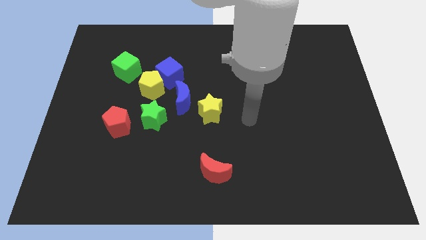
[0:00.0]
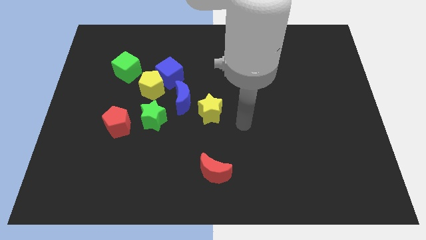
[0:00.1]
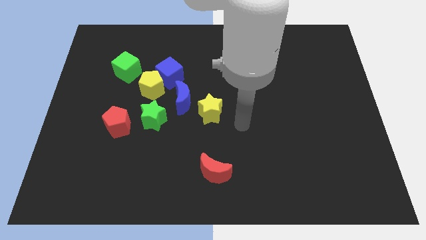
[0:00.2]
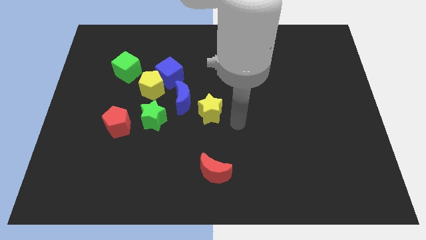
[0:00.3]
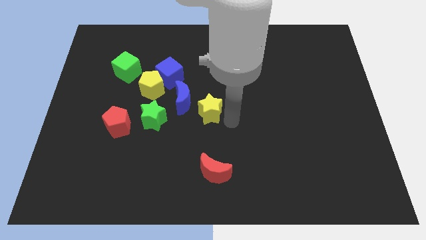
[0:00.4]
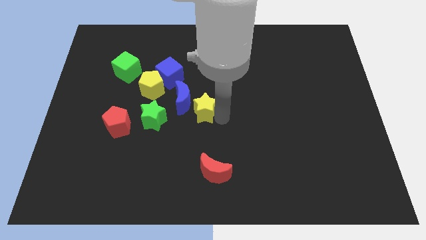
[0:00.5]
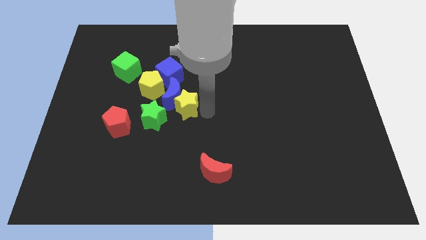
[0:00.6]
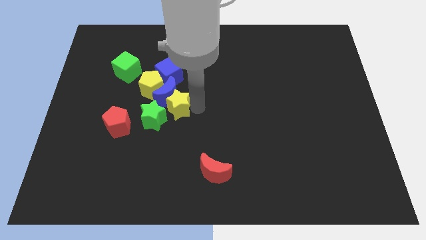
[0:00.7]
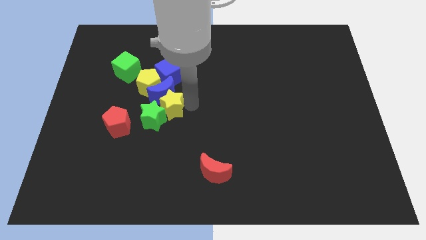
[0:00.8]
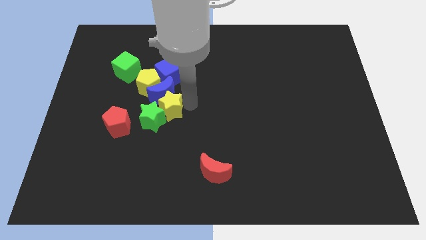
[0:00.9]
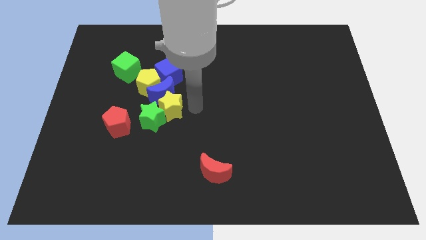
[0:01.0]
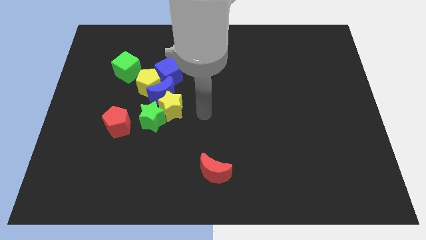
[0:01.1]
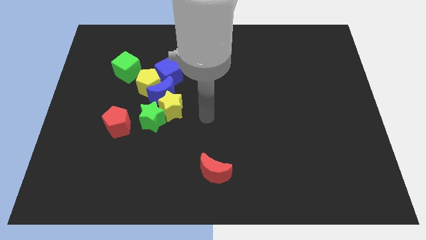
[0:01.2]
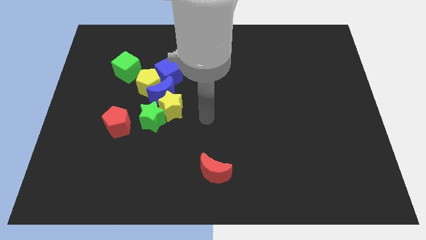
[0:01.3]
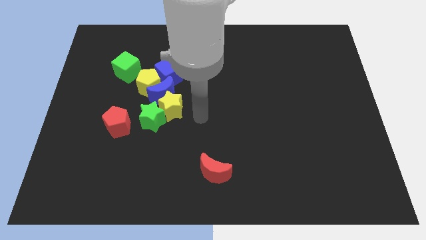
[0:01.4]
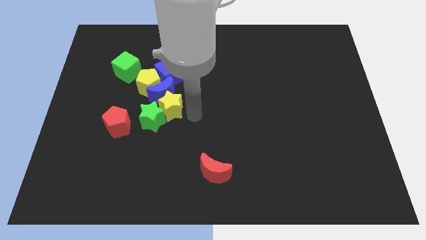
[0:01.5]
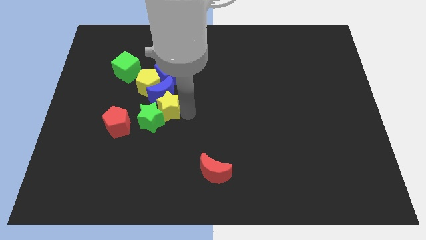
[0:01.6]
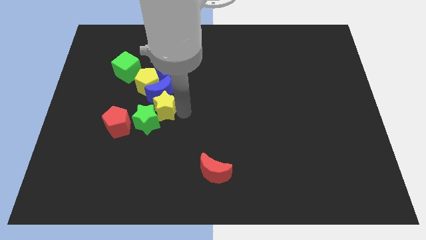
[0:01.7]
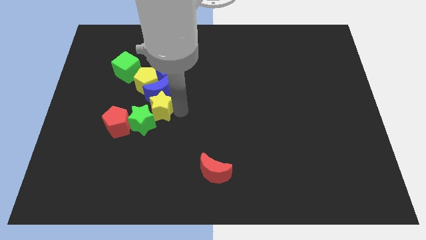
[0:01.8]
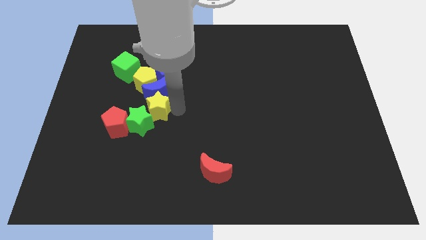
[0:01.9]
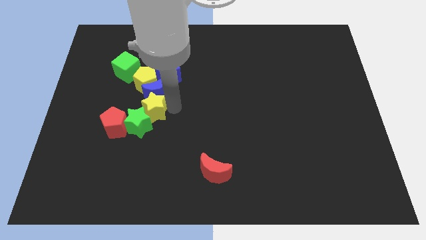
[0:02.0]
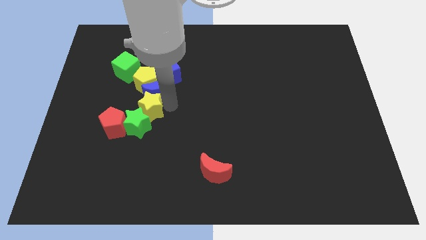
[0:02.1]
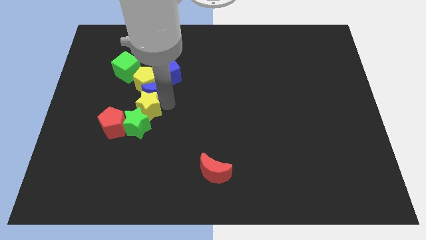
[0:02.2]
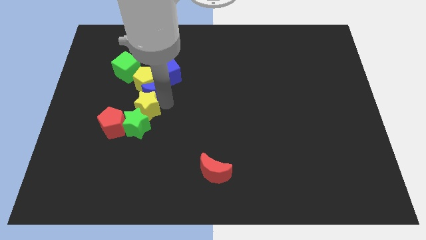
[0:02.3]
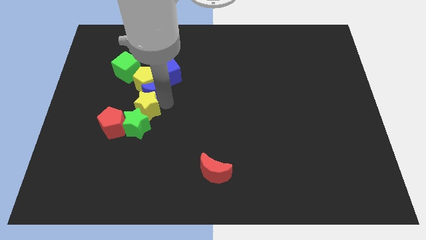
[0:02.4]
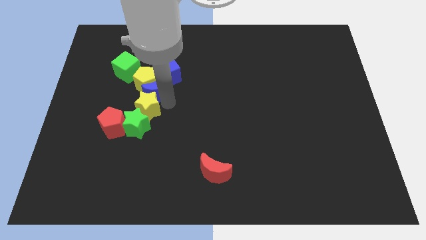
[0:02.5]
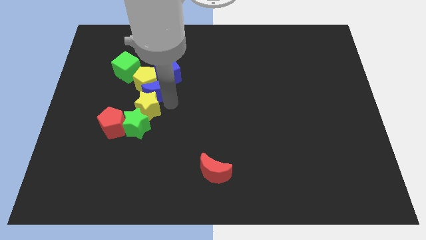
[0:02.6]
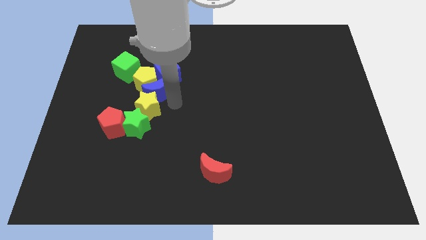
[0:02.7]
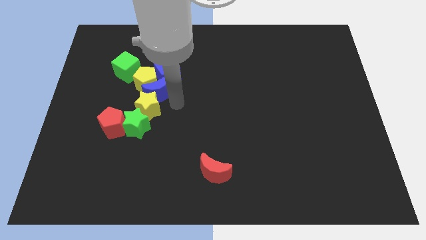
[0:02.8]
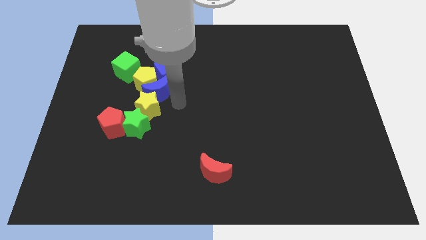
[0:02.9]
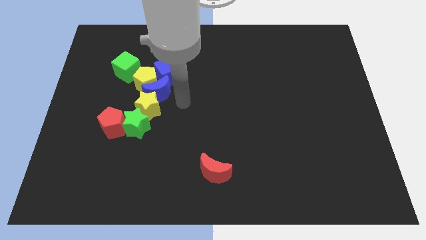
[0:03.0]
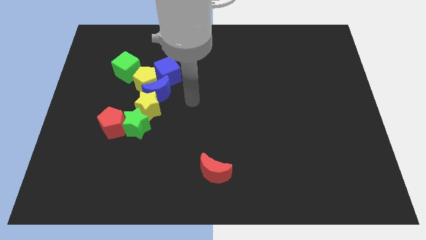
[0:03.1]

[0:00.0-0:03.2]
push the yellow star to the bottom left to the blue crescent

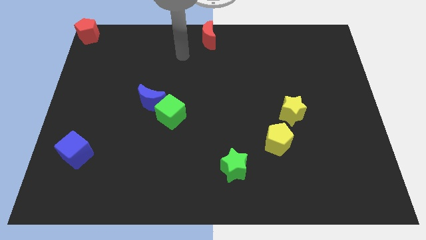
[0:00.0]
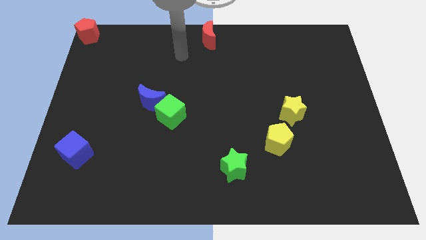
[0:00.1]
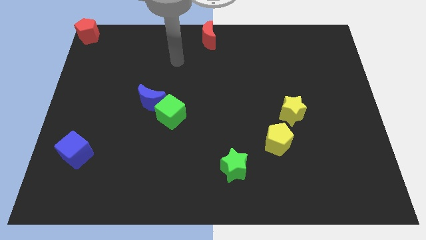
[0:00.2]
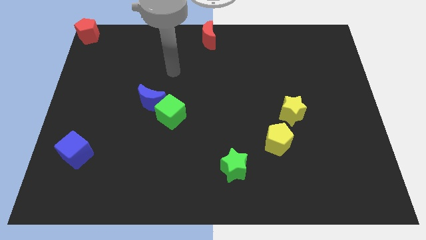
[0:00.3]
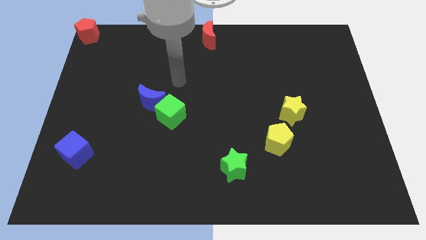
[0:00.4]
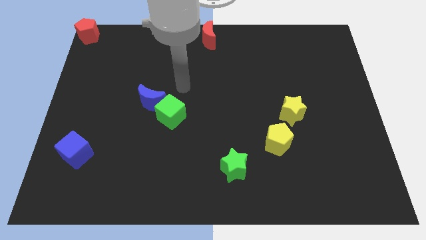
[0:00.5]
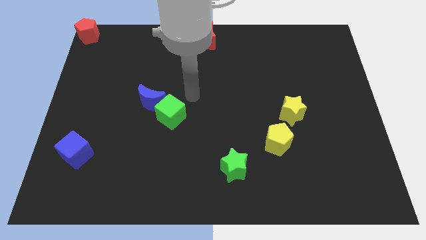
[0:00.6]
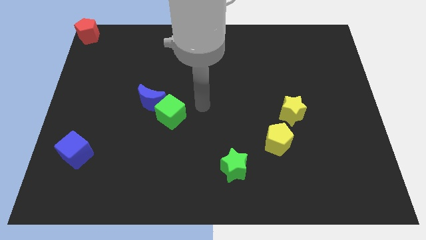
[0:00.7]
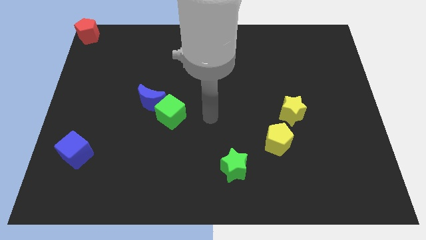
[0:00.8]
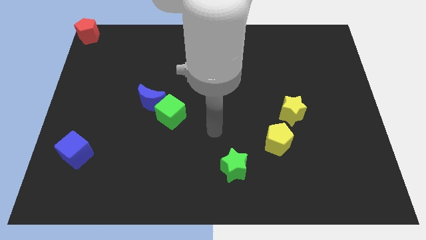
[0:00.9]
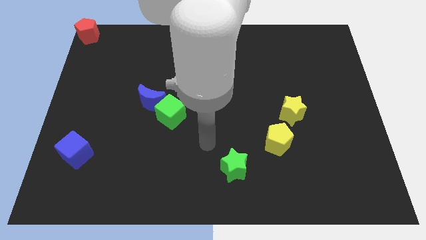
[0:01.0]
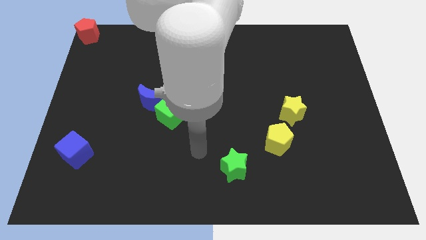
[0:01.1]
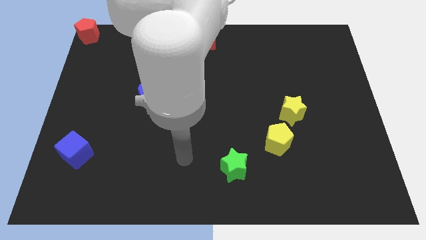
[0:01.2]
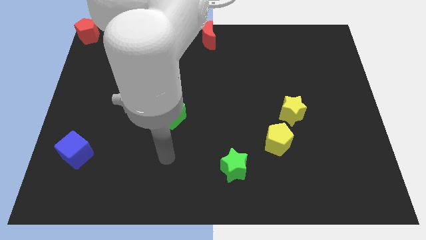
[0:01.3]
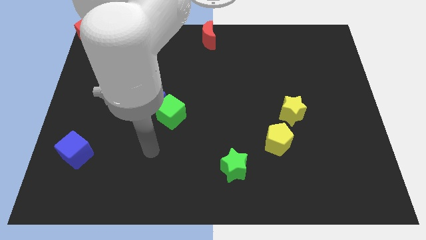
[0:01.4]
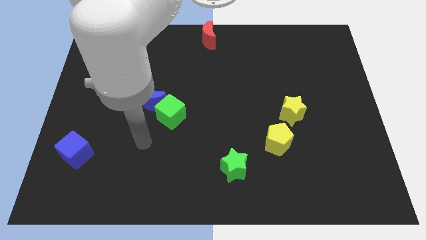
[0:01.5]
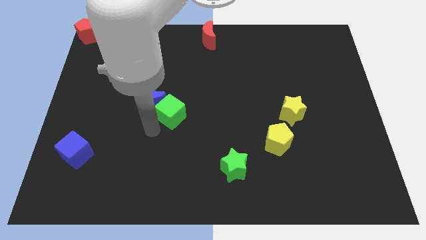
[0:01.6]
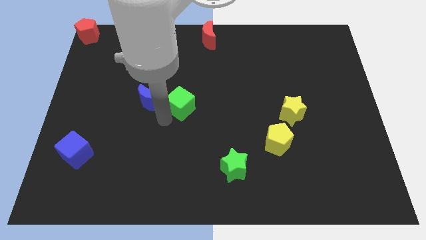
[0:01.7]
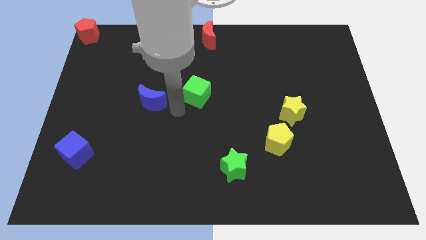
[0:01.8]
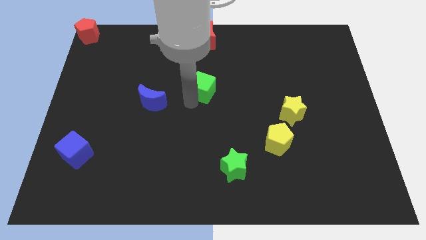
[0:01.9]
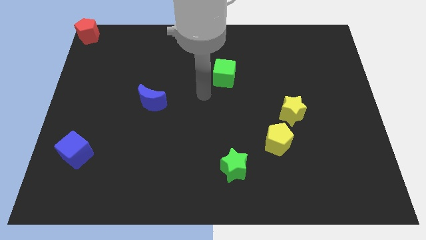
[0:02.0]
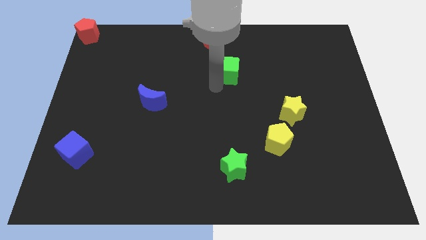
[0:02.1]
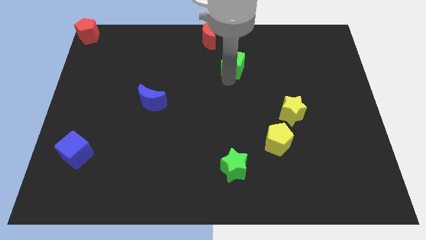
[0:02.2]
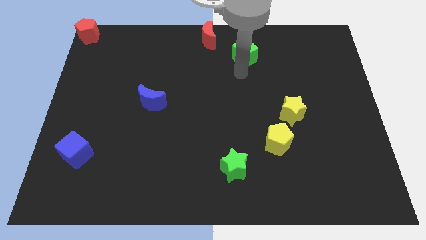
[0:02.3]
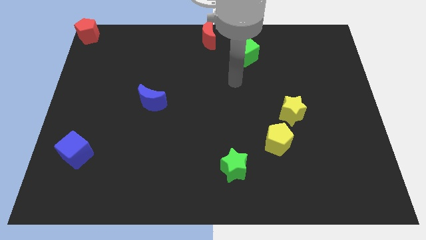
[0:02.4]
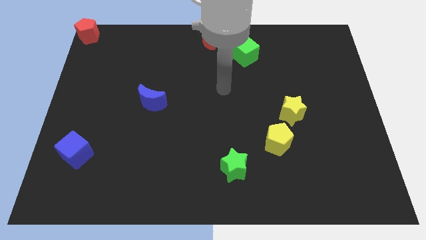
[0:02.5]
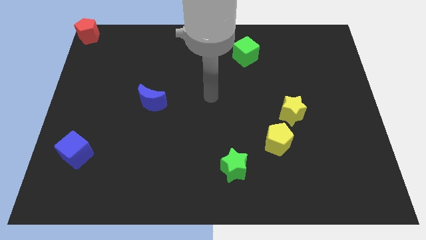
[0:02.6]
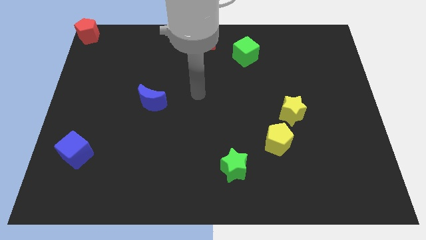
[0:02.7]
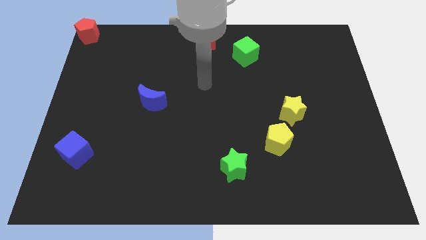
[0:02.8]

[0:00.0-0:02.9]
move the green cube to the bottom right of the red crescent

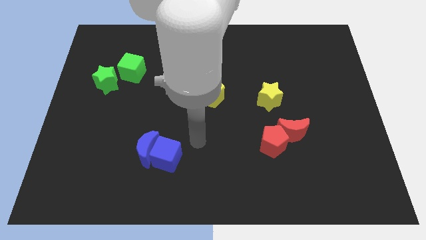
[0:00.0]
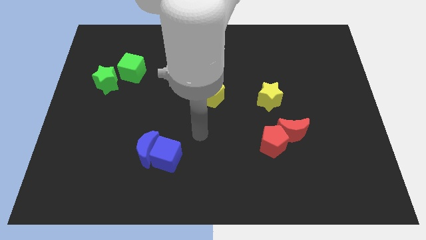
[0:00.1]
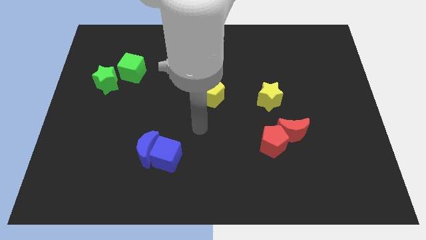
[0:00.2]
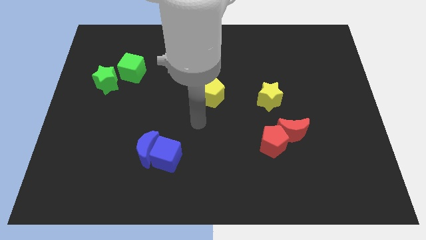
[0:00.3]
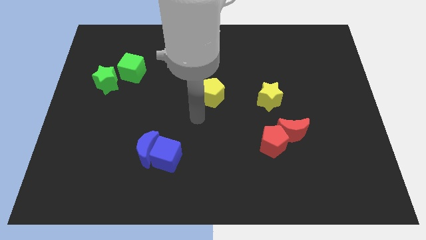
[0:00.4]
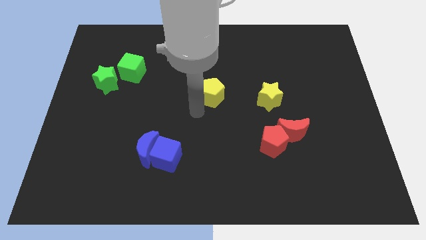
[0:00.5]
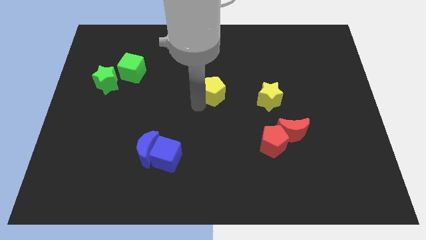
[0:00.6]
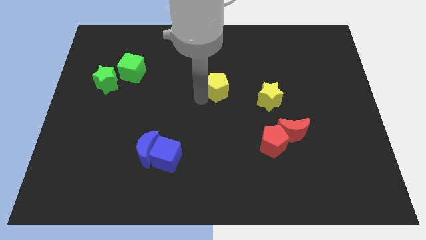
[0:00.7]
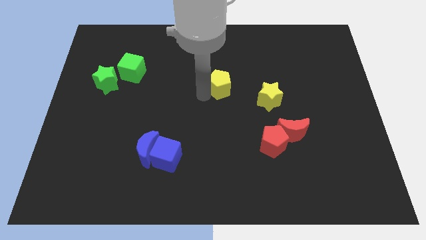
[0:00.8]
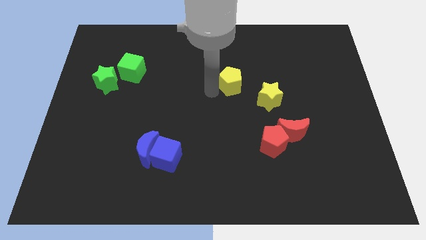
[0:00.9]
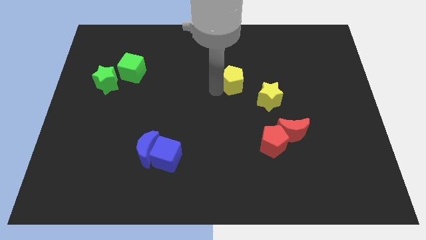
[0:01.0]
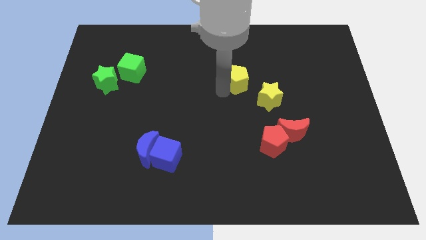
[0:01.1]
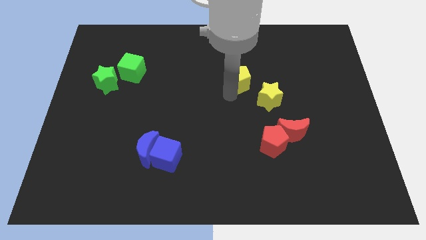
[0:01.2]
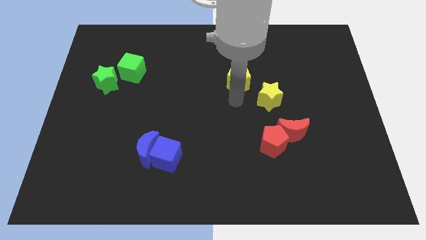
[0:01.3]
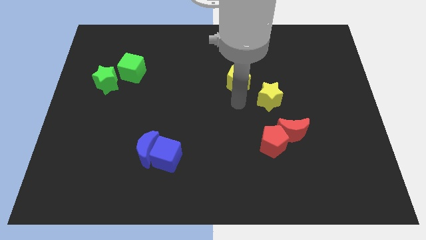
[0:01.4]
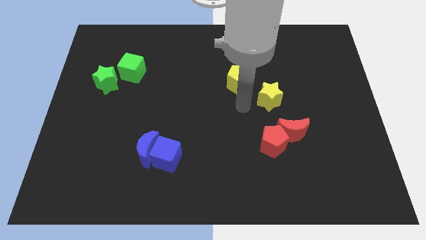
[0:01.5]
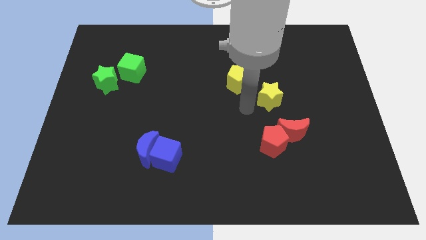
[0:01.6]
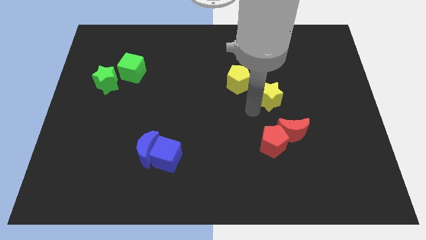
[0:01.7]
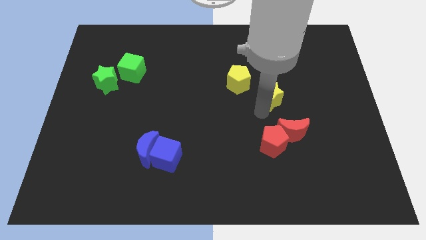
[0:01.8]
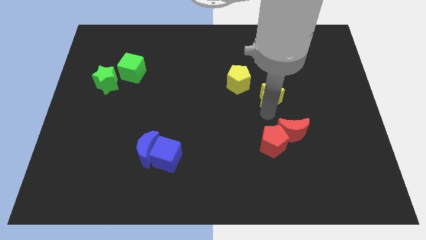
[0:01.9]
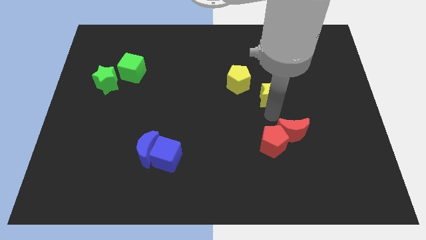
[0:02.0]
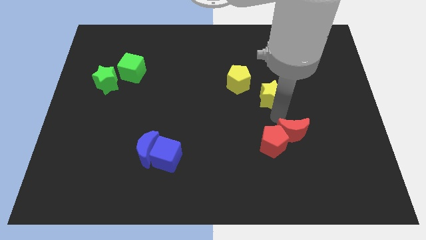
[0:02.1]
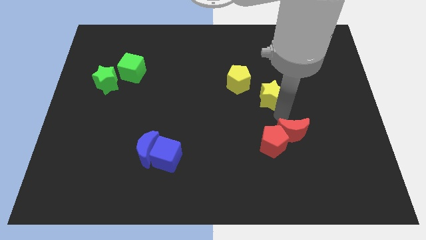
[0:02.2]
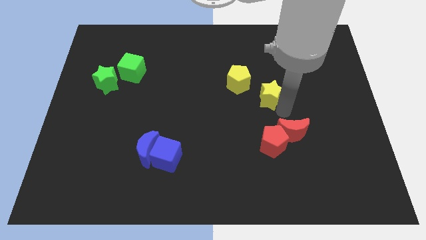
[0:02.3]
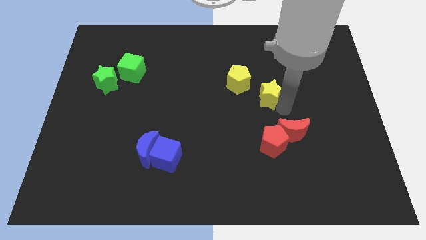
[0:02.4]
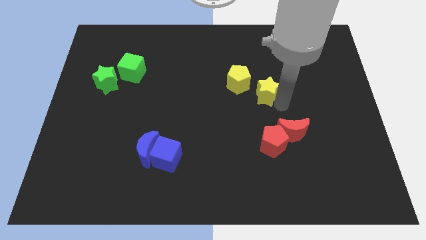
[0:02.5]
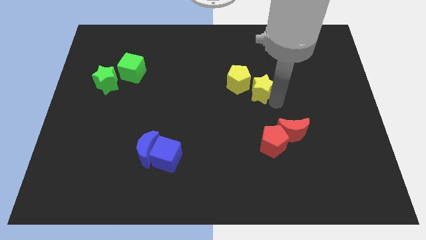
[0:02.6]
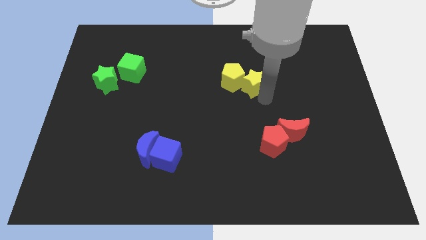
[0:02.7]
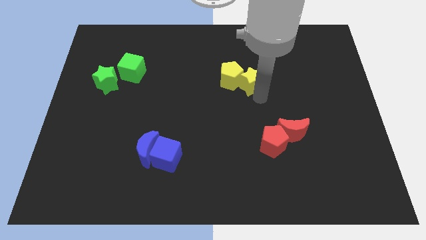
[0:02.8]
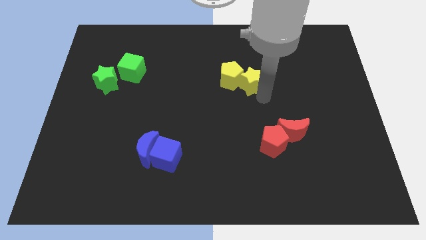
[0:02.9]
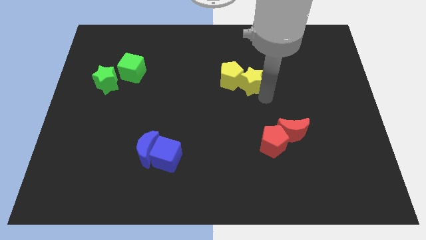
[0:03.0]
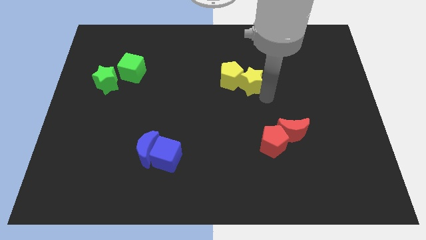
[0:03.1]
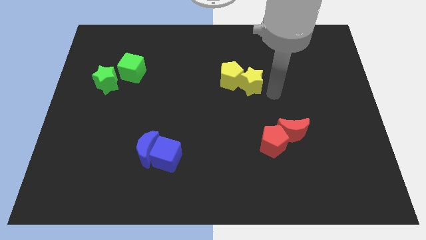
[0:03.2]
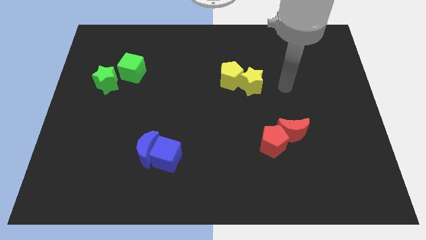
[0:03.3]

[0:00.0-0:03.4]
push the yellow star into the yellow pentagon
